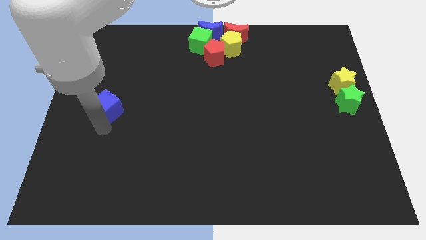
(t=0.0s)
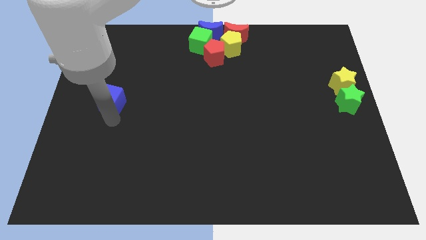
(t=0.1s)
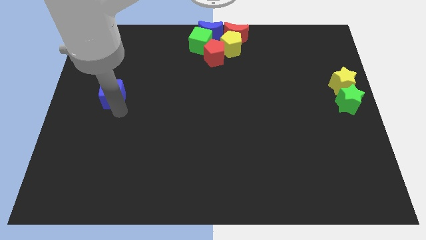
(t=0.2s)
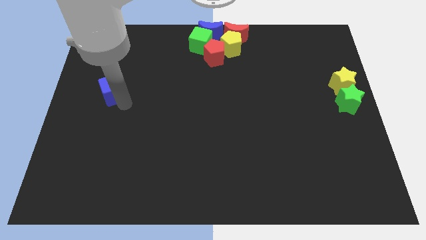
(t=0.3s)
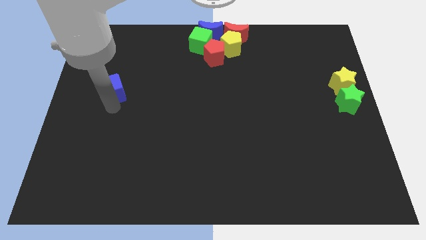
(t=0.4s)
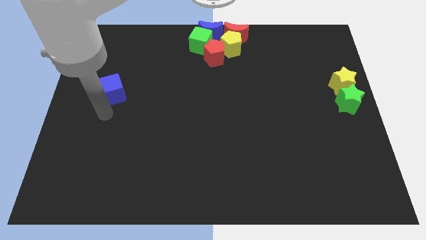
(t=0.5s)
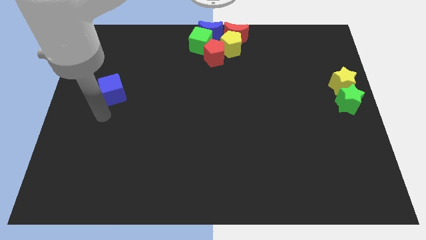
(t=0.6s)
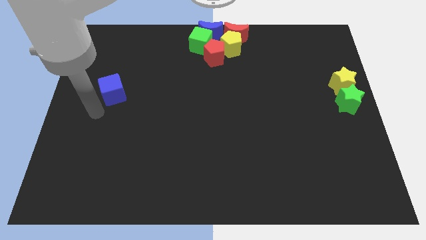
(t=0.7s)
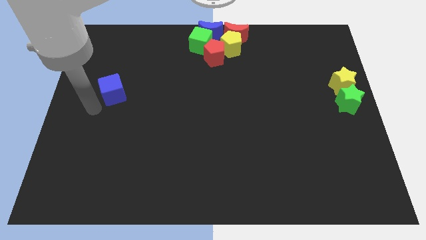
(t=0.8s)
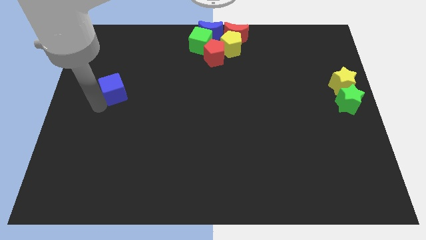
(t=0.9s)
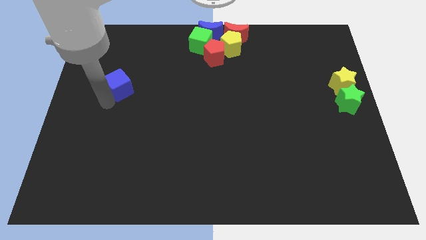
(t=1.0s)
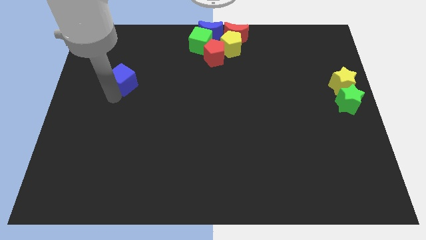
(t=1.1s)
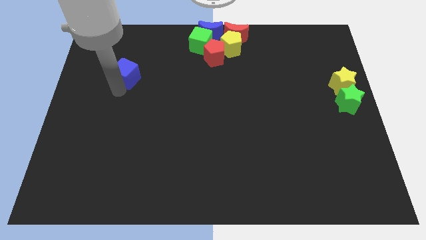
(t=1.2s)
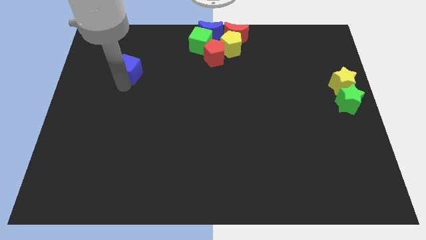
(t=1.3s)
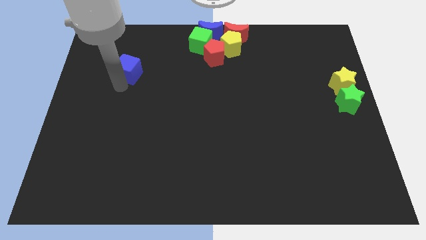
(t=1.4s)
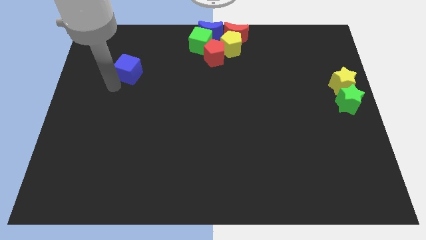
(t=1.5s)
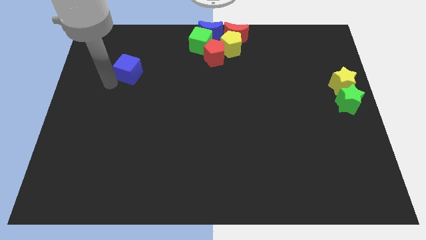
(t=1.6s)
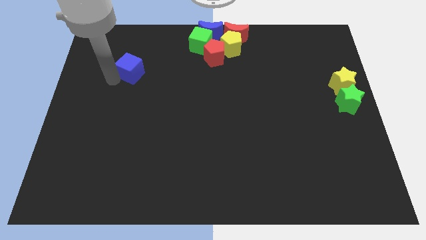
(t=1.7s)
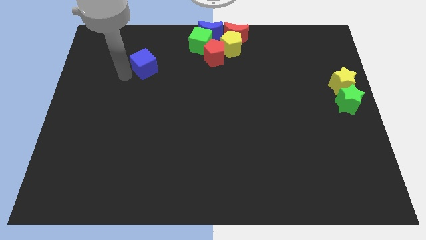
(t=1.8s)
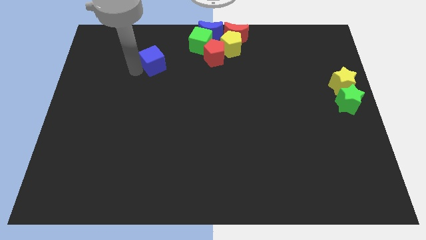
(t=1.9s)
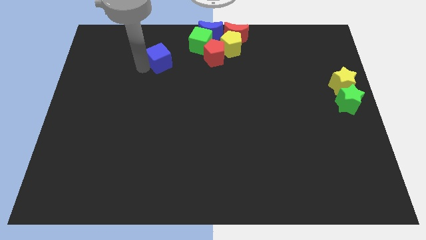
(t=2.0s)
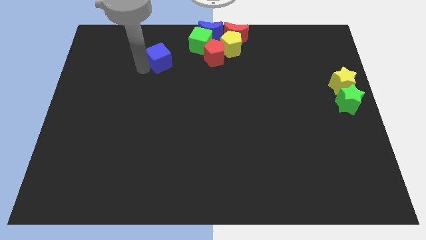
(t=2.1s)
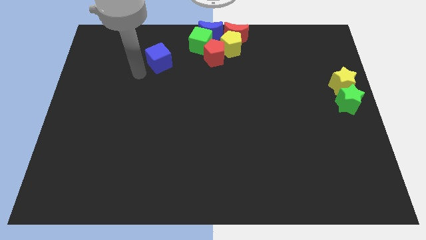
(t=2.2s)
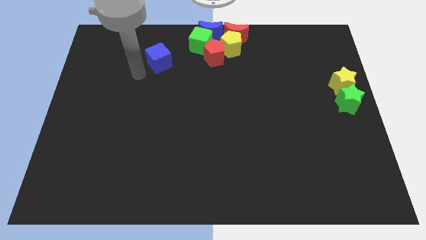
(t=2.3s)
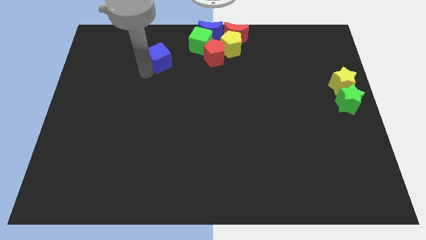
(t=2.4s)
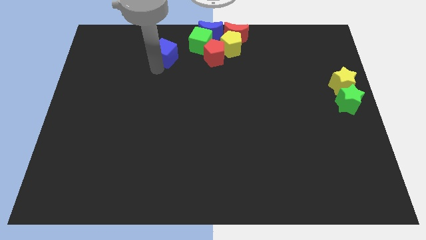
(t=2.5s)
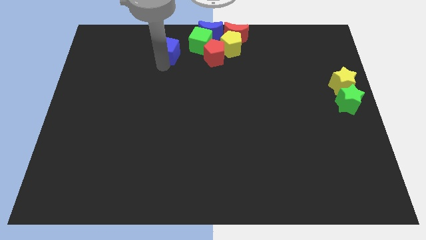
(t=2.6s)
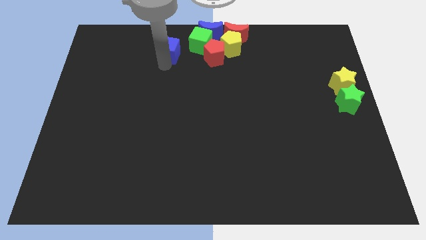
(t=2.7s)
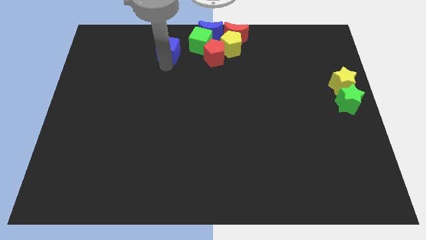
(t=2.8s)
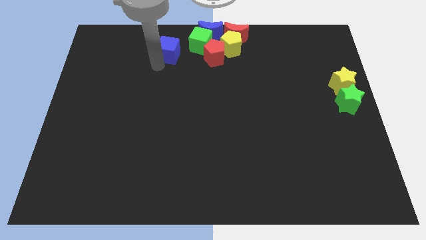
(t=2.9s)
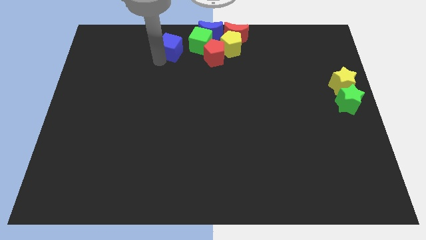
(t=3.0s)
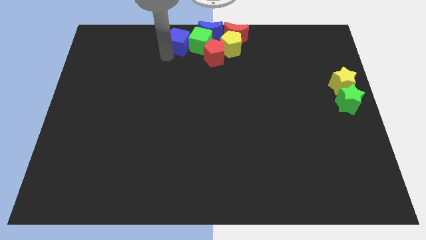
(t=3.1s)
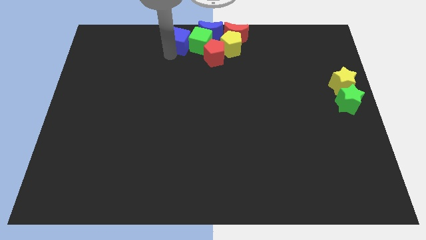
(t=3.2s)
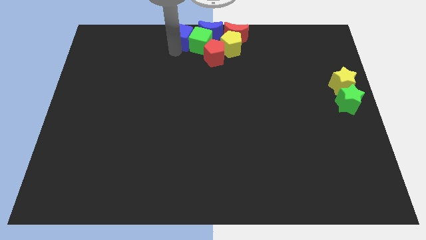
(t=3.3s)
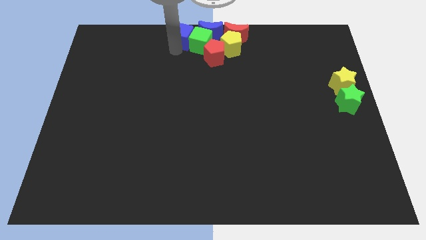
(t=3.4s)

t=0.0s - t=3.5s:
move the blue cube into the green cube

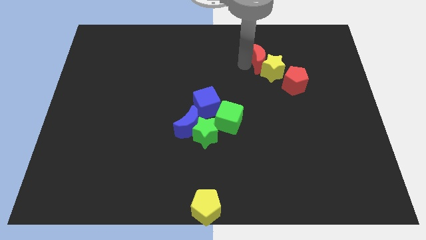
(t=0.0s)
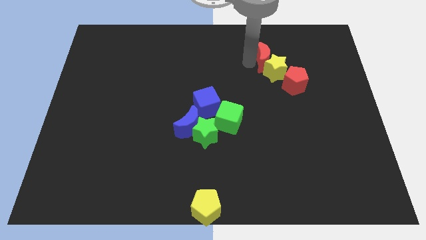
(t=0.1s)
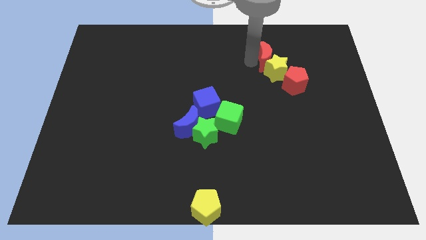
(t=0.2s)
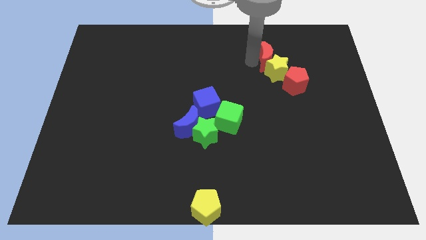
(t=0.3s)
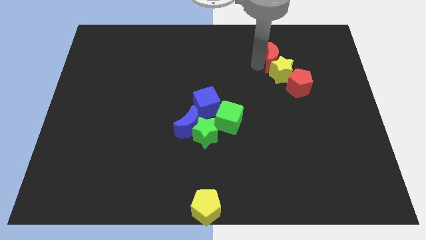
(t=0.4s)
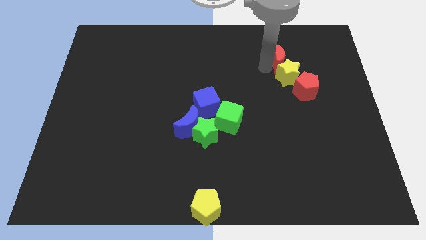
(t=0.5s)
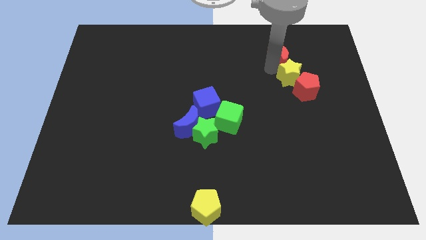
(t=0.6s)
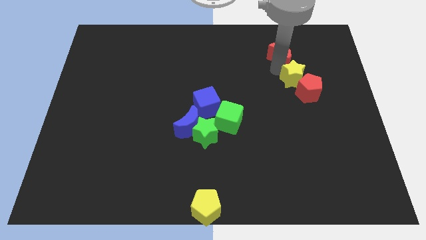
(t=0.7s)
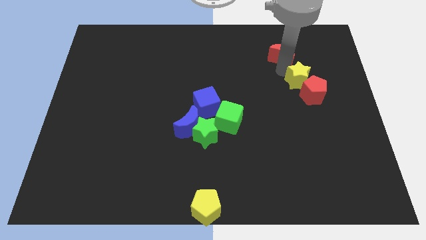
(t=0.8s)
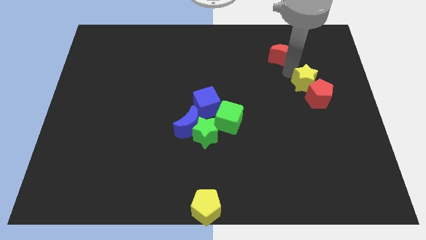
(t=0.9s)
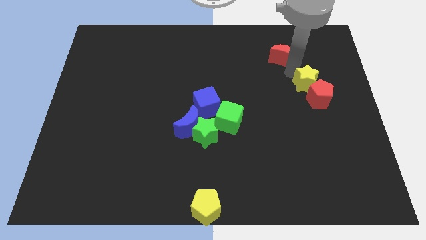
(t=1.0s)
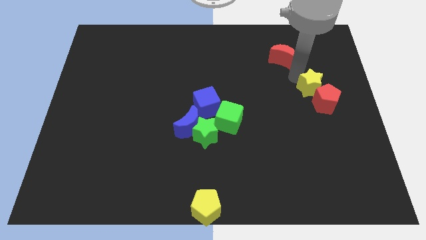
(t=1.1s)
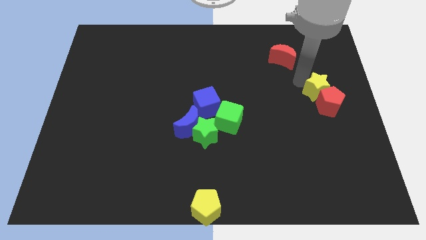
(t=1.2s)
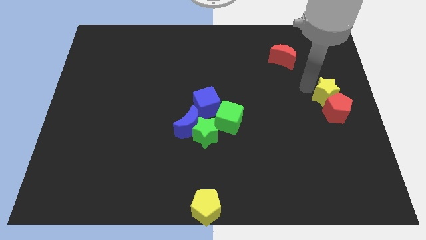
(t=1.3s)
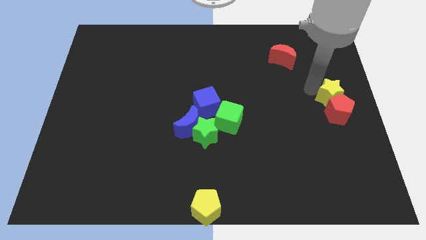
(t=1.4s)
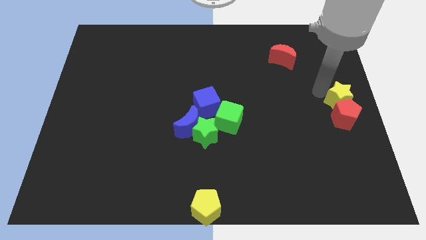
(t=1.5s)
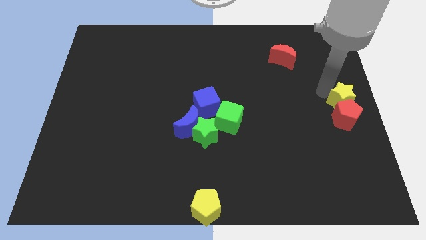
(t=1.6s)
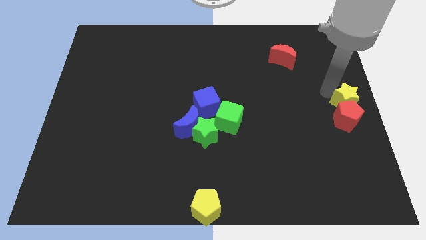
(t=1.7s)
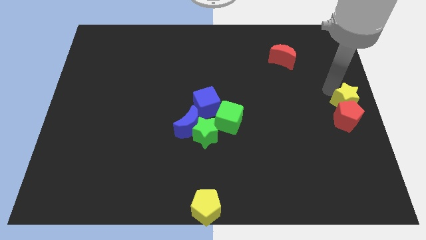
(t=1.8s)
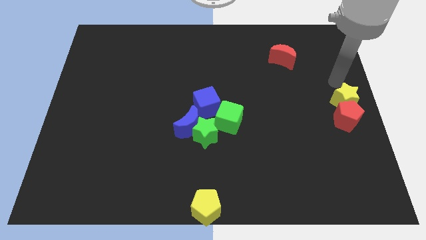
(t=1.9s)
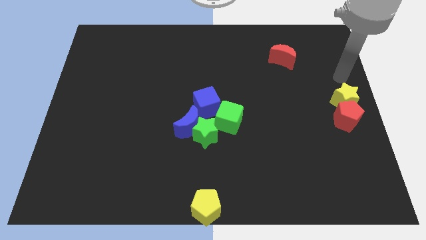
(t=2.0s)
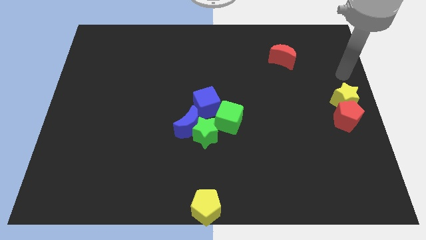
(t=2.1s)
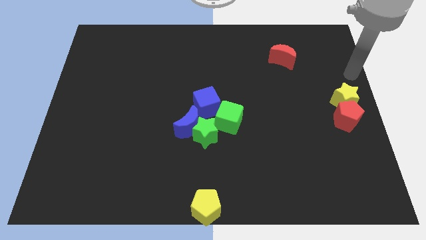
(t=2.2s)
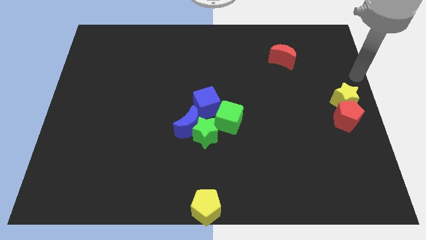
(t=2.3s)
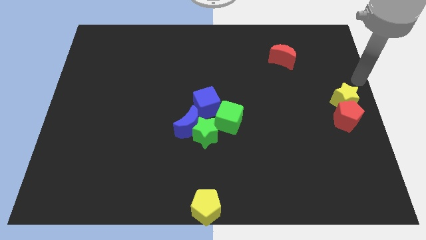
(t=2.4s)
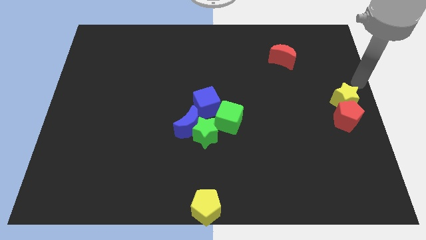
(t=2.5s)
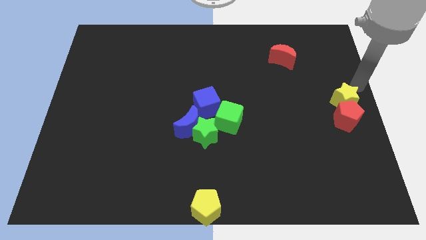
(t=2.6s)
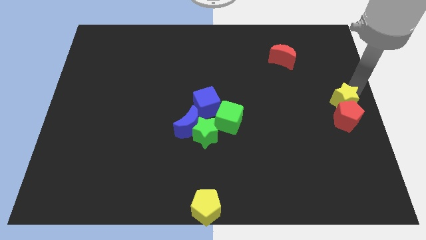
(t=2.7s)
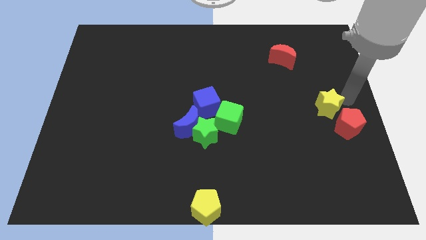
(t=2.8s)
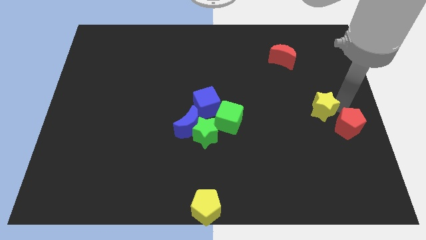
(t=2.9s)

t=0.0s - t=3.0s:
drag the yellow star slightly downwards

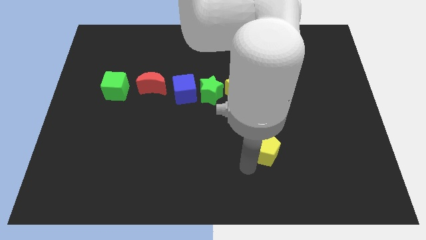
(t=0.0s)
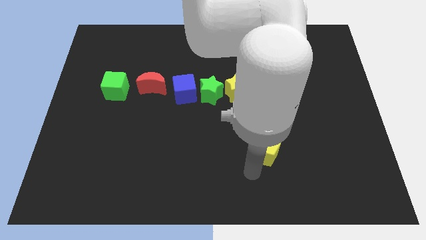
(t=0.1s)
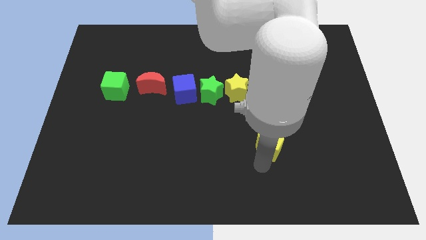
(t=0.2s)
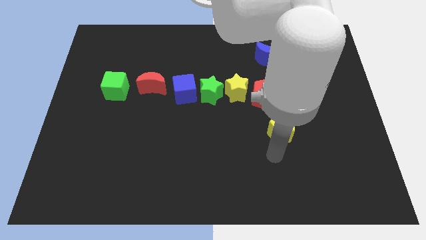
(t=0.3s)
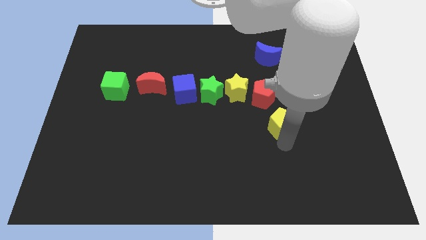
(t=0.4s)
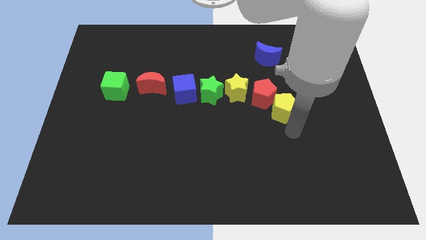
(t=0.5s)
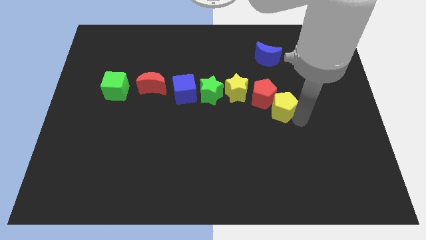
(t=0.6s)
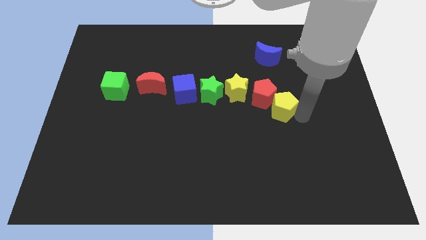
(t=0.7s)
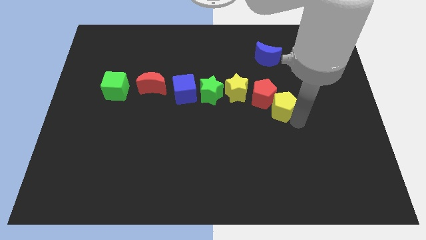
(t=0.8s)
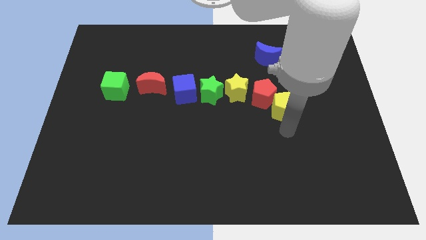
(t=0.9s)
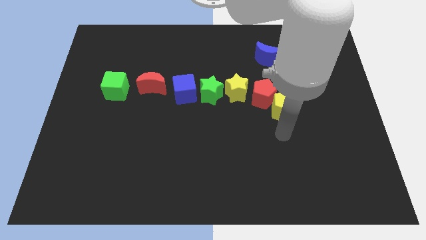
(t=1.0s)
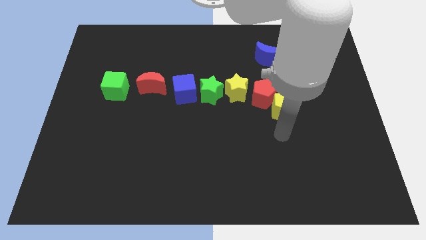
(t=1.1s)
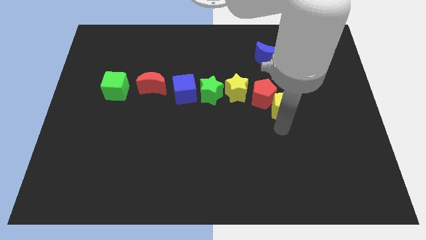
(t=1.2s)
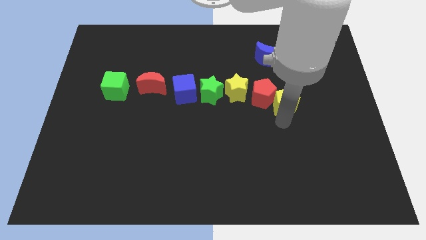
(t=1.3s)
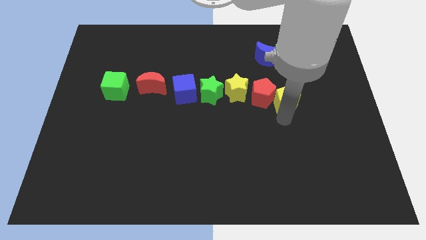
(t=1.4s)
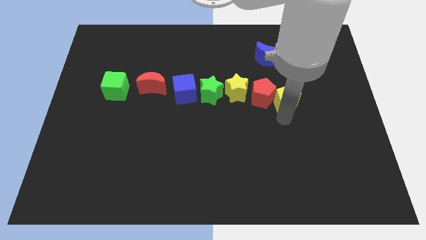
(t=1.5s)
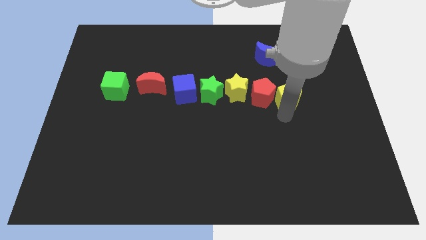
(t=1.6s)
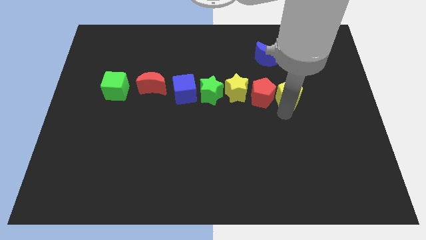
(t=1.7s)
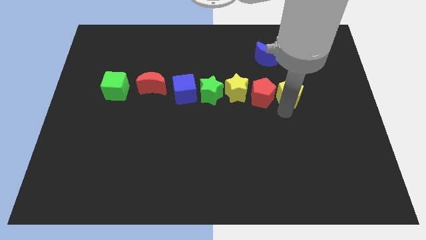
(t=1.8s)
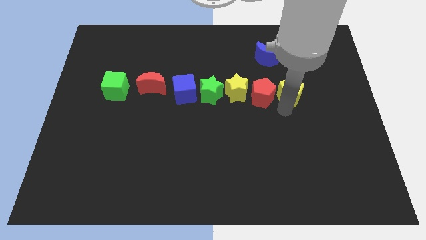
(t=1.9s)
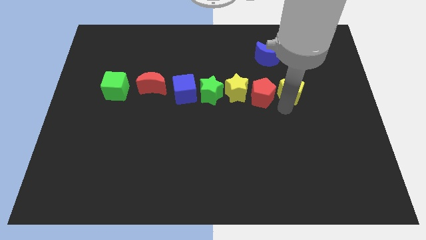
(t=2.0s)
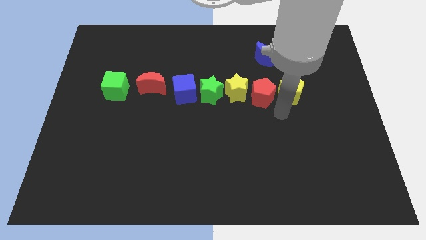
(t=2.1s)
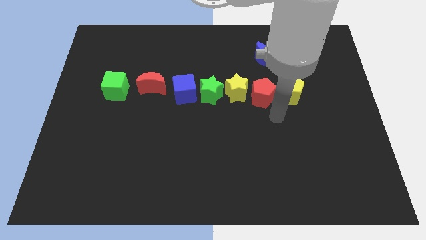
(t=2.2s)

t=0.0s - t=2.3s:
place the yellow pentagon to the right of the red pentagon

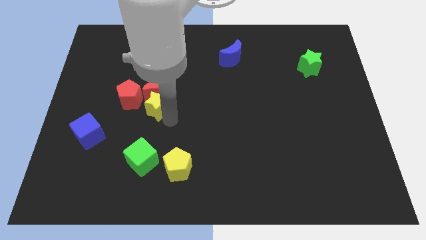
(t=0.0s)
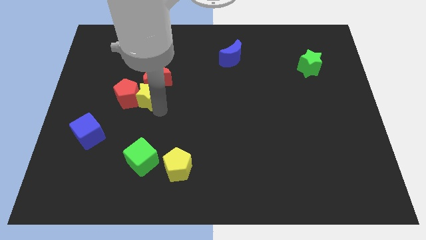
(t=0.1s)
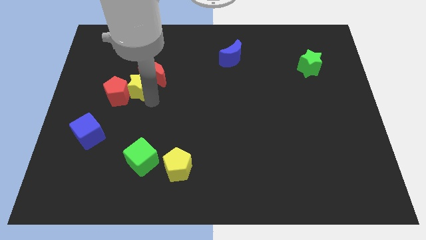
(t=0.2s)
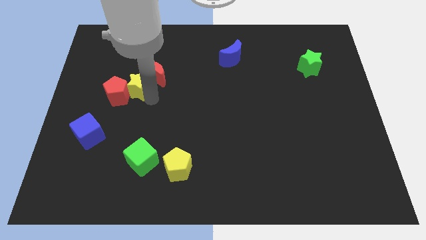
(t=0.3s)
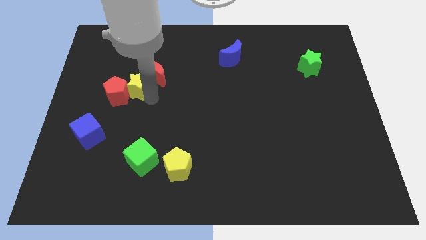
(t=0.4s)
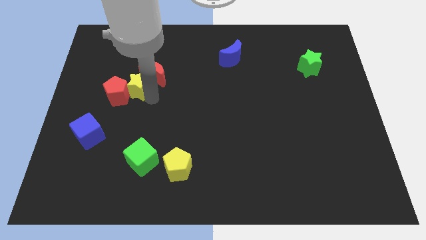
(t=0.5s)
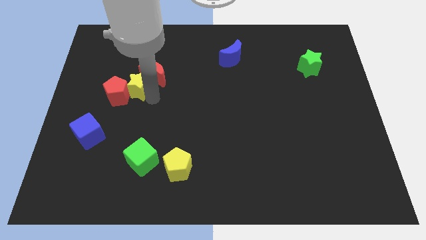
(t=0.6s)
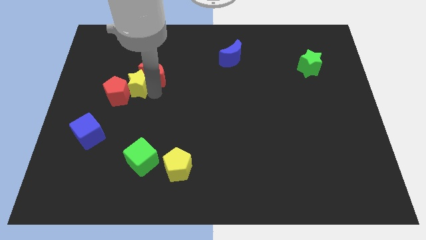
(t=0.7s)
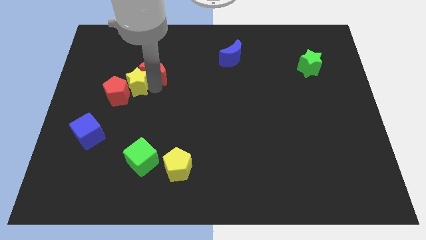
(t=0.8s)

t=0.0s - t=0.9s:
push the yellow star to the top left of the board
